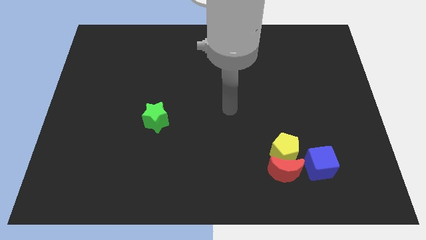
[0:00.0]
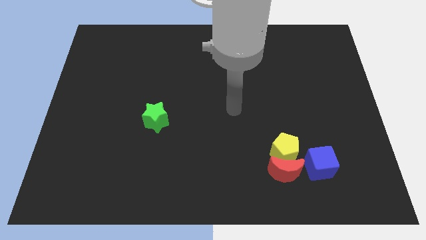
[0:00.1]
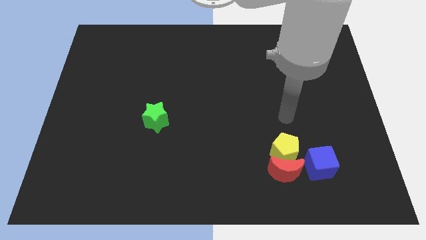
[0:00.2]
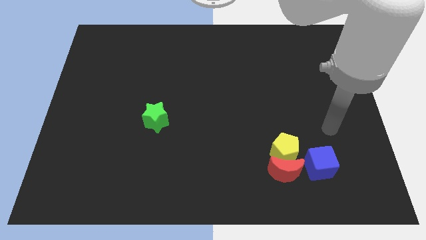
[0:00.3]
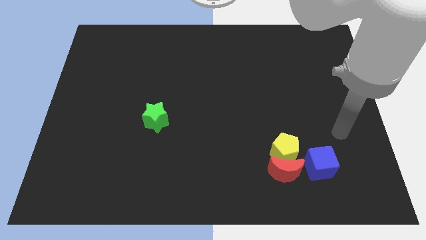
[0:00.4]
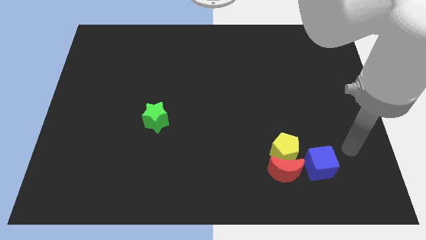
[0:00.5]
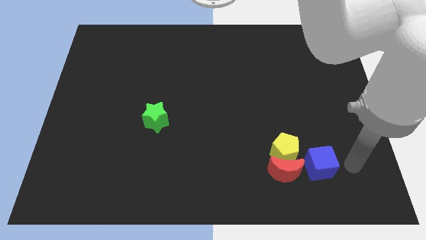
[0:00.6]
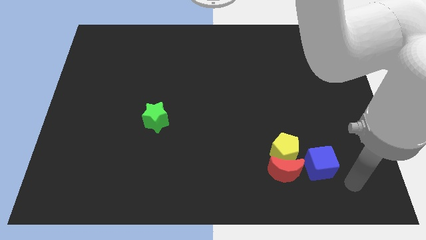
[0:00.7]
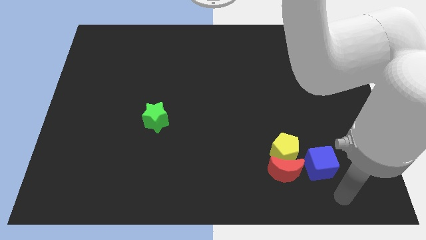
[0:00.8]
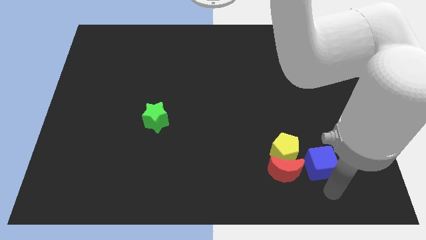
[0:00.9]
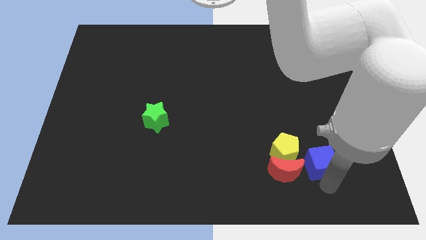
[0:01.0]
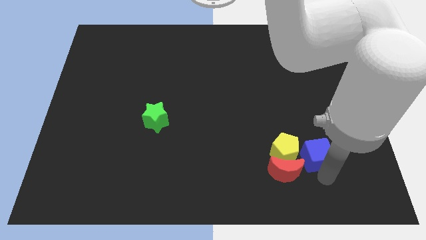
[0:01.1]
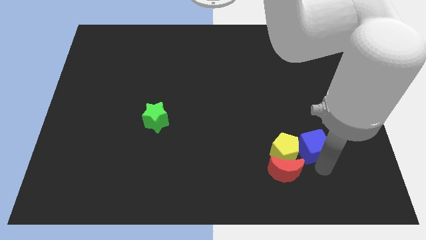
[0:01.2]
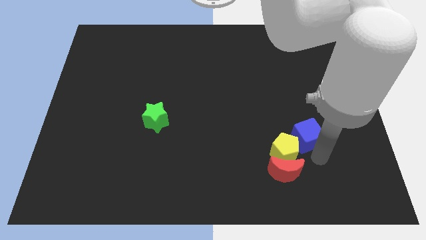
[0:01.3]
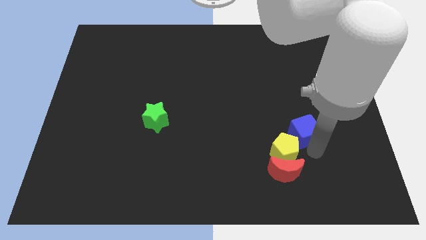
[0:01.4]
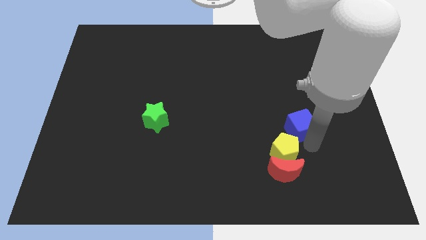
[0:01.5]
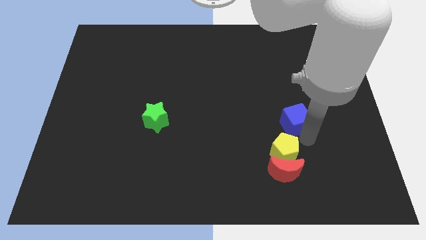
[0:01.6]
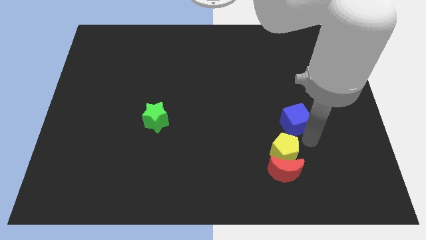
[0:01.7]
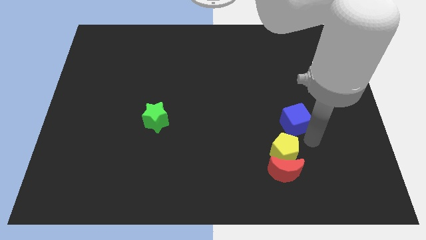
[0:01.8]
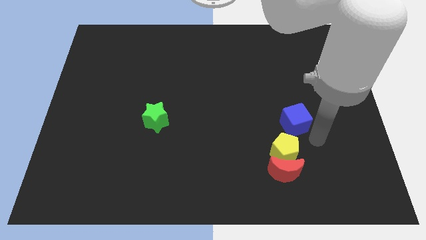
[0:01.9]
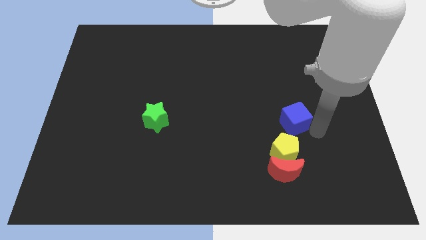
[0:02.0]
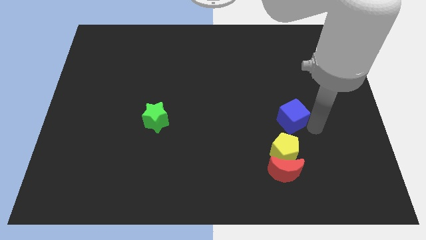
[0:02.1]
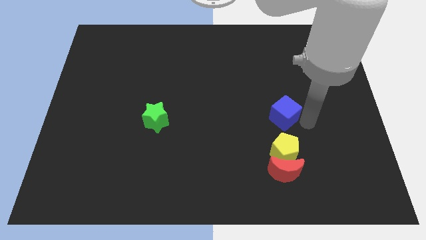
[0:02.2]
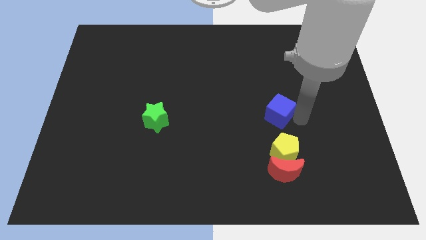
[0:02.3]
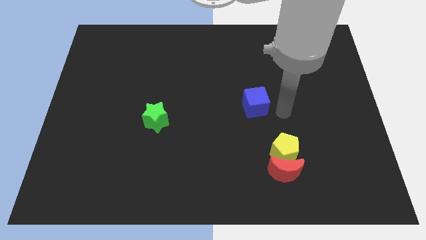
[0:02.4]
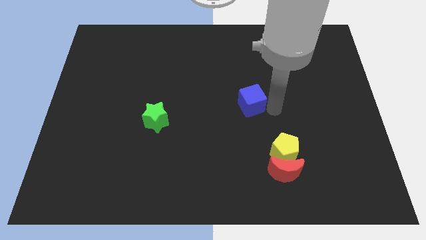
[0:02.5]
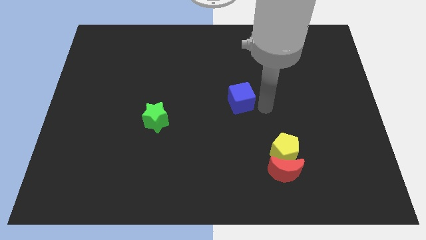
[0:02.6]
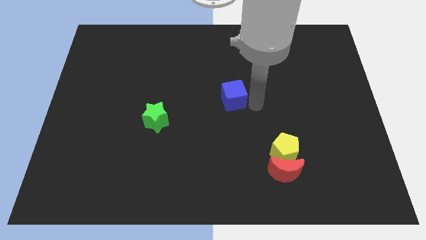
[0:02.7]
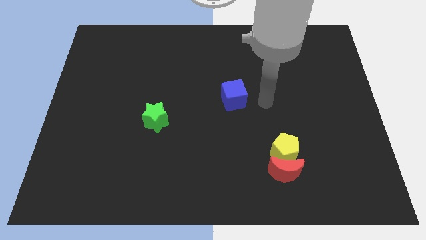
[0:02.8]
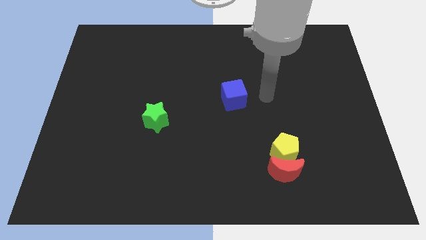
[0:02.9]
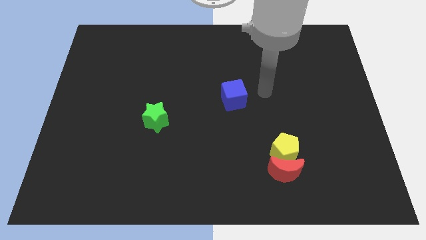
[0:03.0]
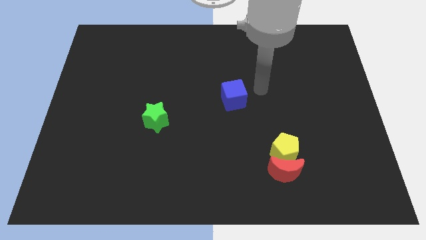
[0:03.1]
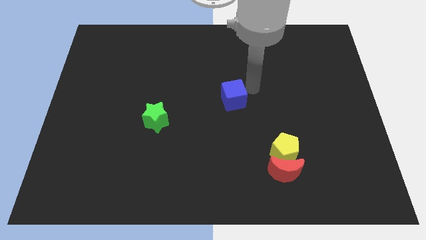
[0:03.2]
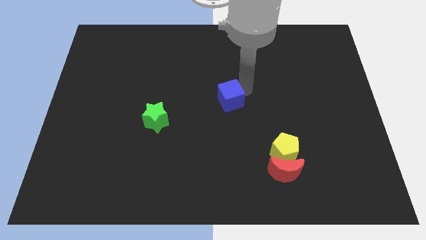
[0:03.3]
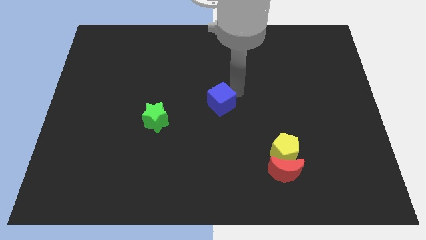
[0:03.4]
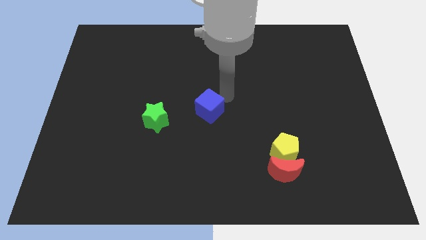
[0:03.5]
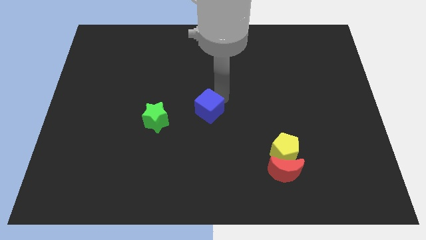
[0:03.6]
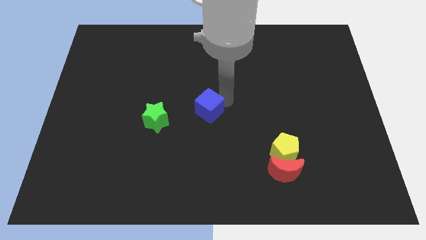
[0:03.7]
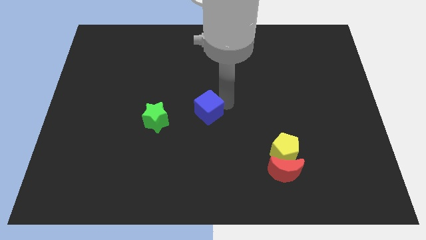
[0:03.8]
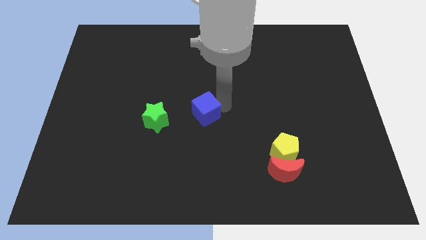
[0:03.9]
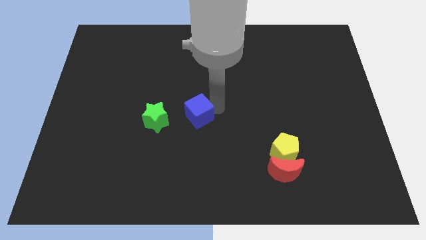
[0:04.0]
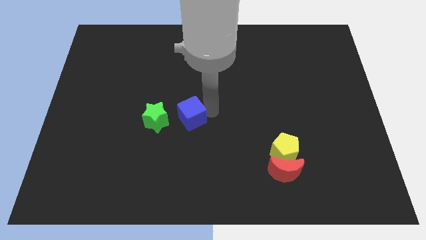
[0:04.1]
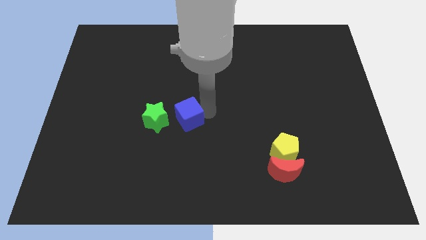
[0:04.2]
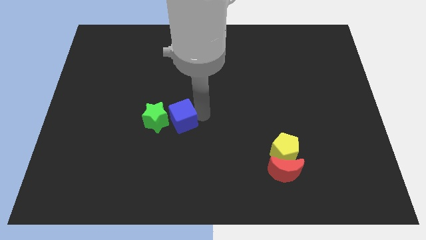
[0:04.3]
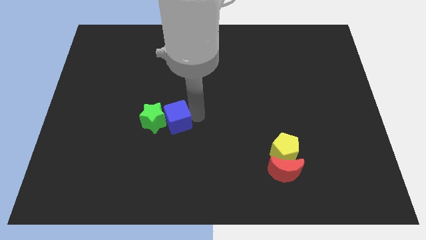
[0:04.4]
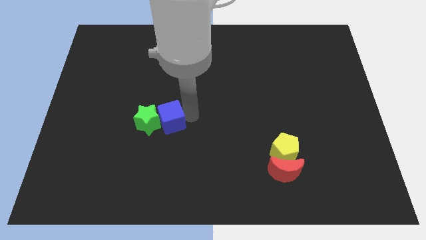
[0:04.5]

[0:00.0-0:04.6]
push the cube towards the green block

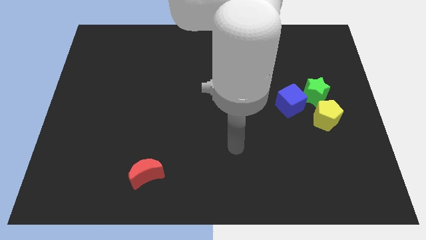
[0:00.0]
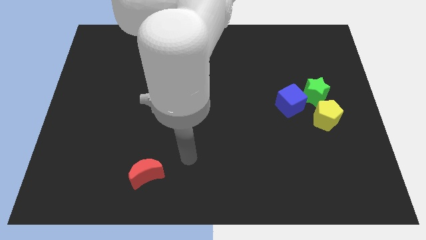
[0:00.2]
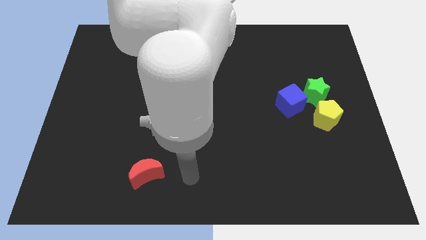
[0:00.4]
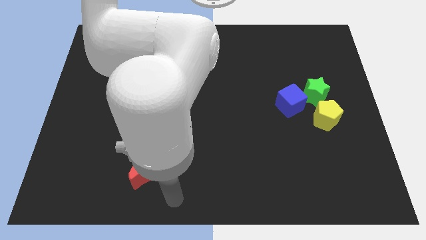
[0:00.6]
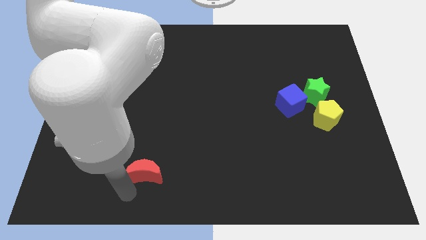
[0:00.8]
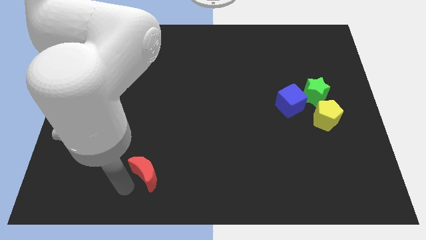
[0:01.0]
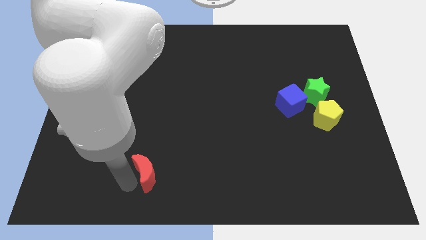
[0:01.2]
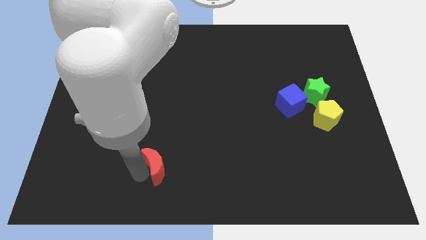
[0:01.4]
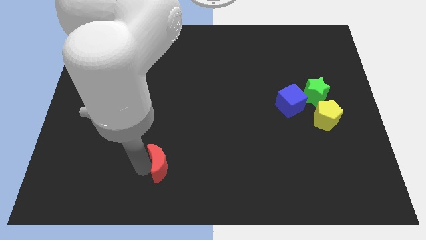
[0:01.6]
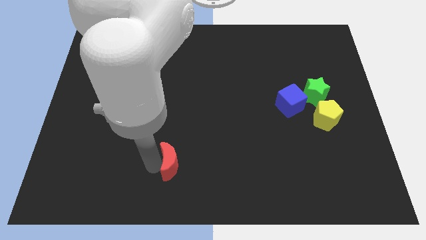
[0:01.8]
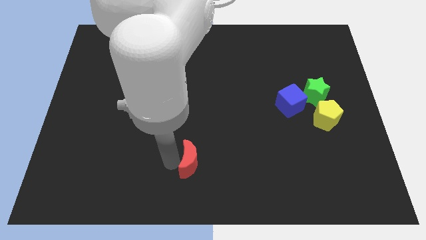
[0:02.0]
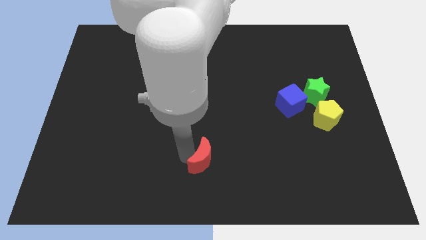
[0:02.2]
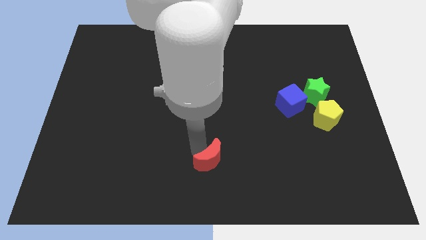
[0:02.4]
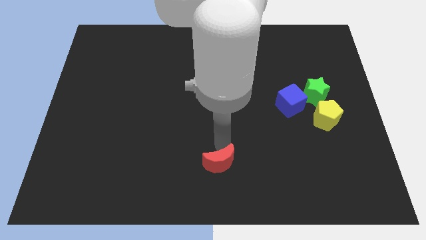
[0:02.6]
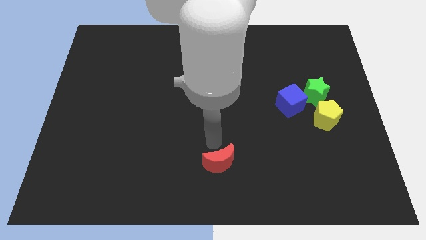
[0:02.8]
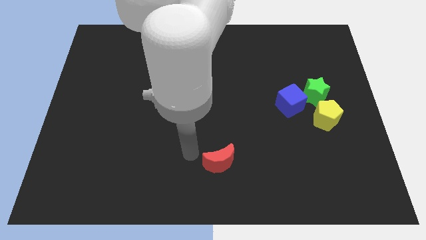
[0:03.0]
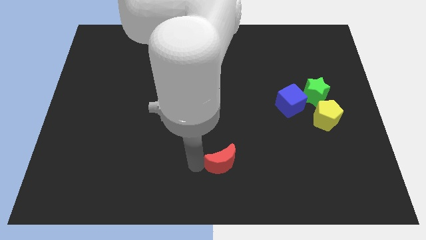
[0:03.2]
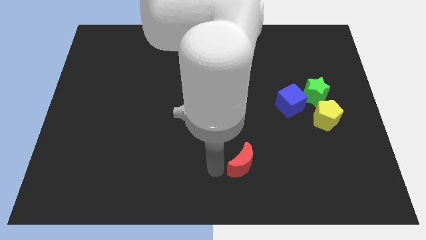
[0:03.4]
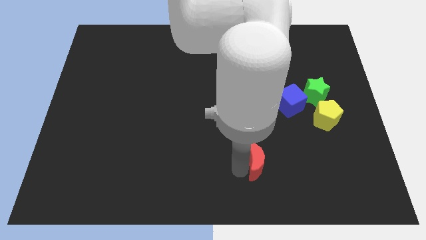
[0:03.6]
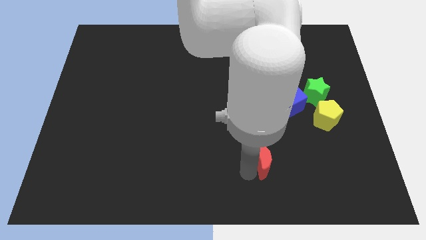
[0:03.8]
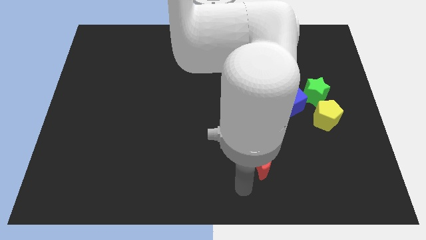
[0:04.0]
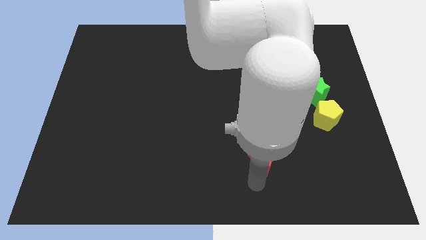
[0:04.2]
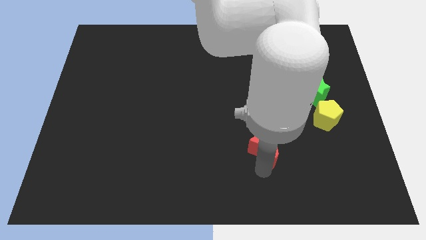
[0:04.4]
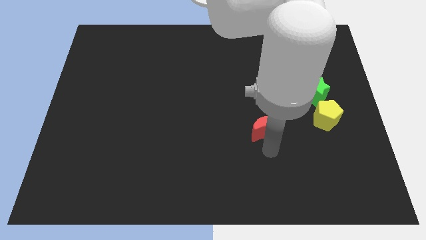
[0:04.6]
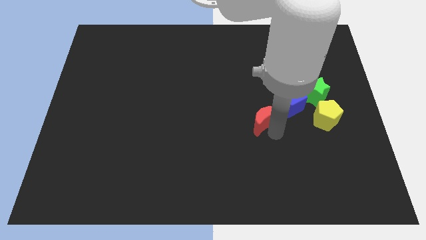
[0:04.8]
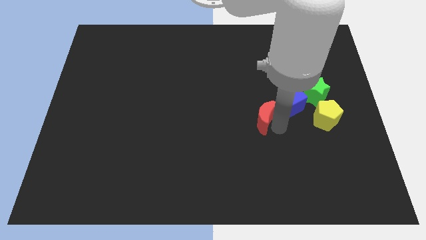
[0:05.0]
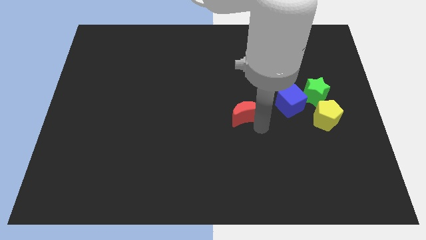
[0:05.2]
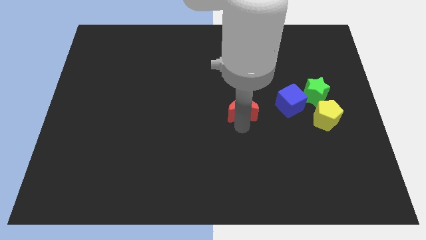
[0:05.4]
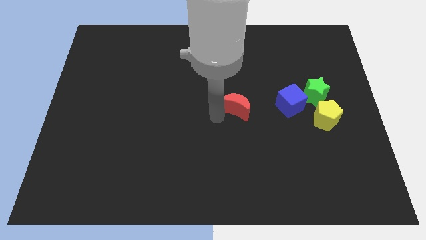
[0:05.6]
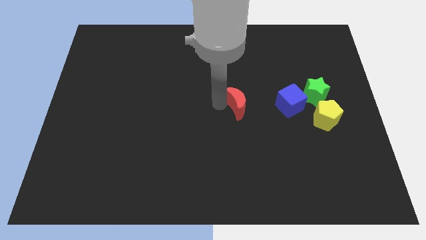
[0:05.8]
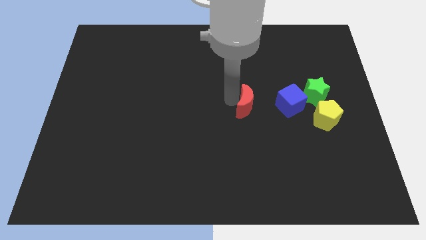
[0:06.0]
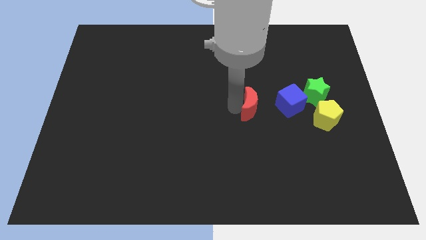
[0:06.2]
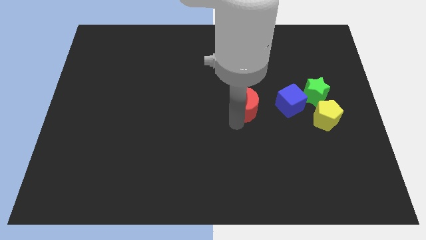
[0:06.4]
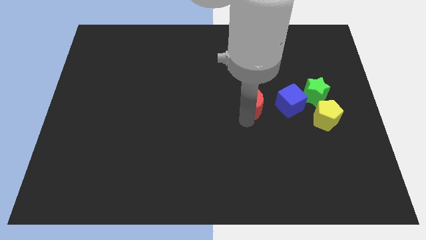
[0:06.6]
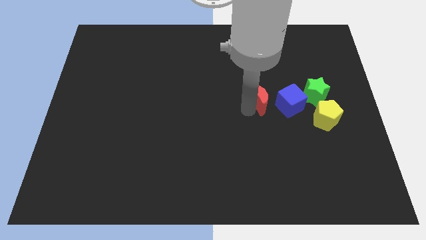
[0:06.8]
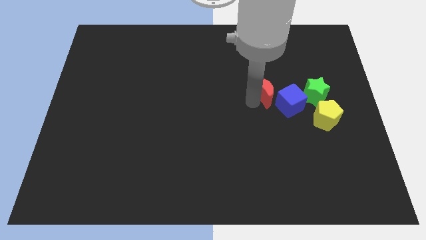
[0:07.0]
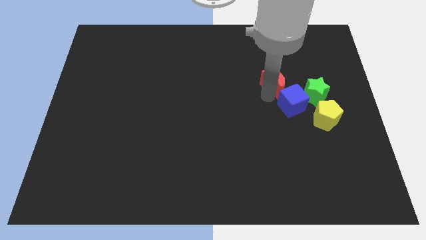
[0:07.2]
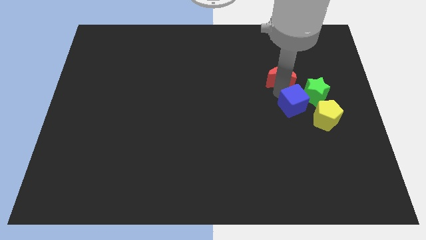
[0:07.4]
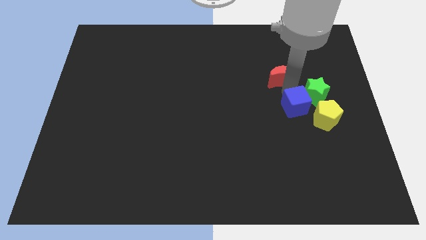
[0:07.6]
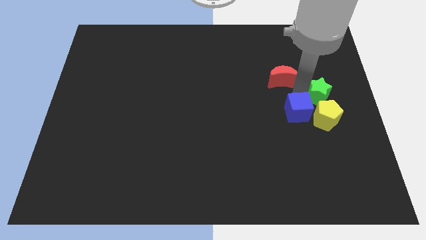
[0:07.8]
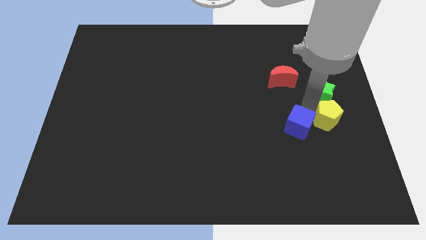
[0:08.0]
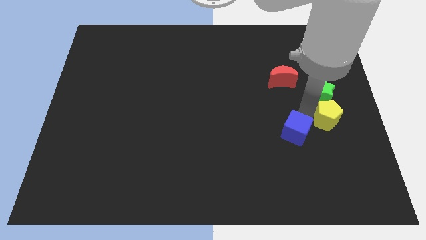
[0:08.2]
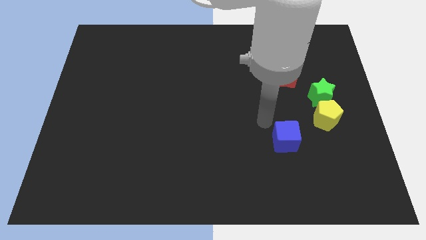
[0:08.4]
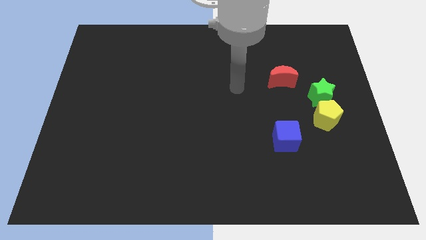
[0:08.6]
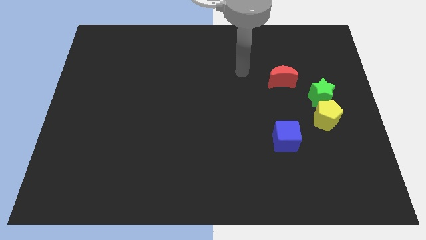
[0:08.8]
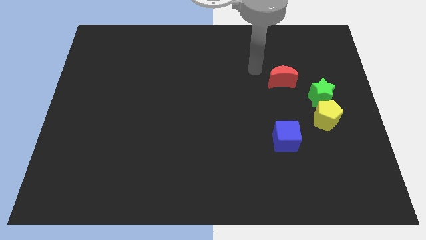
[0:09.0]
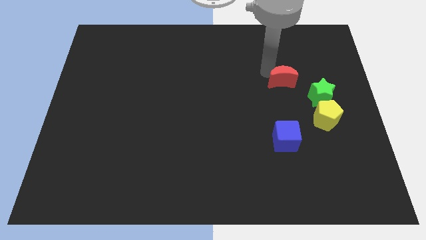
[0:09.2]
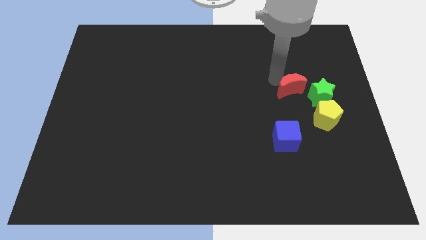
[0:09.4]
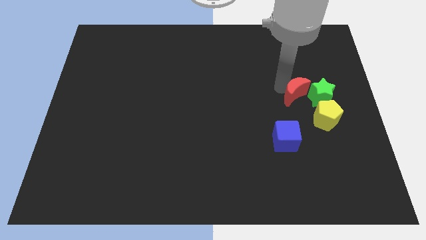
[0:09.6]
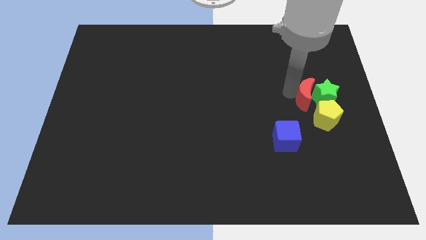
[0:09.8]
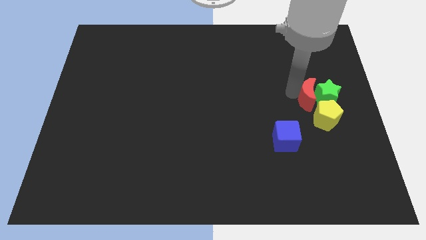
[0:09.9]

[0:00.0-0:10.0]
push the moon close to the green star
